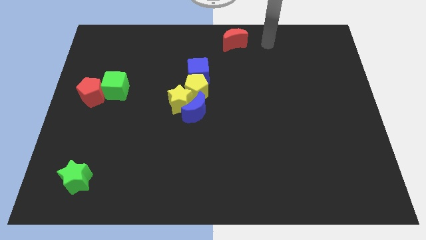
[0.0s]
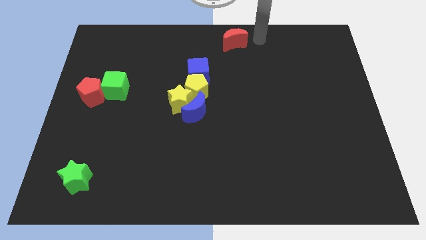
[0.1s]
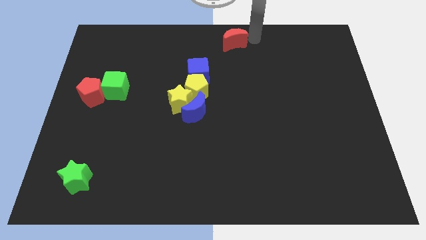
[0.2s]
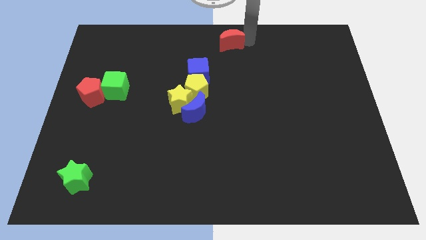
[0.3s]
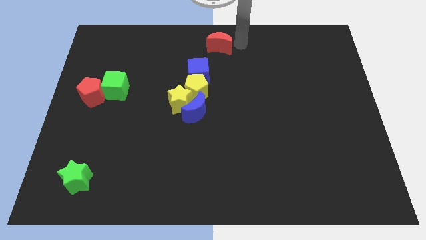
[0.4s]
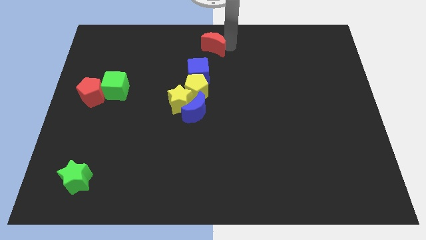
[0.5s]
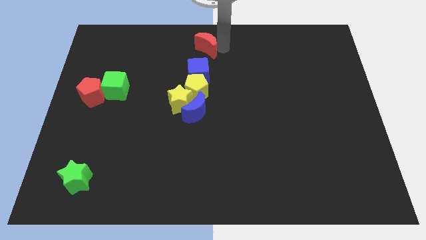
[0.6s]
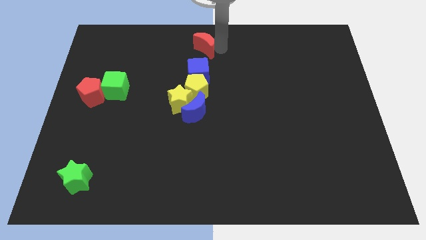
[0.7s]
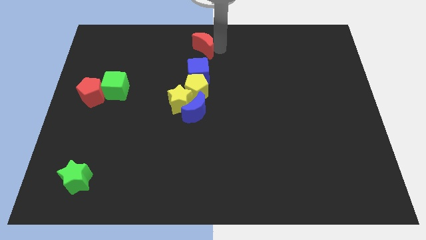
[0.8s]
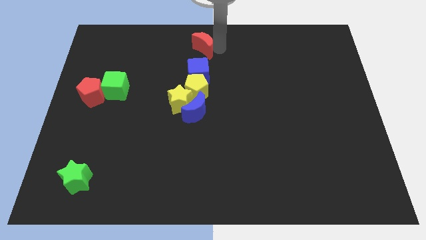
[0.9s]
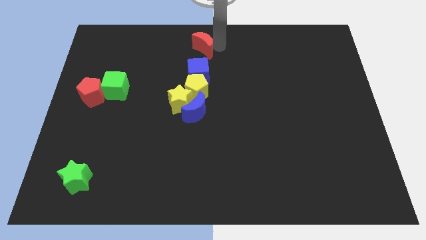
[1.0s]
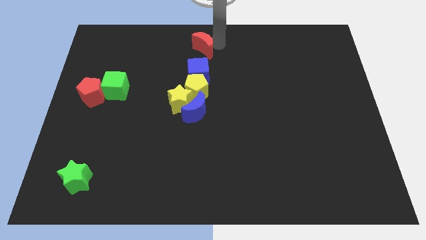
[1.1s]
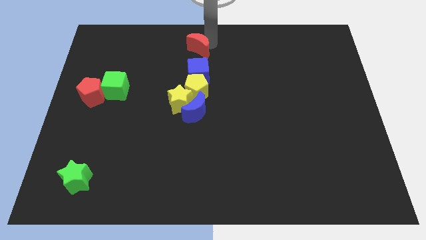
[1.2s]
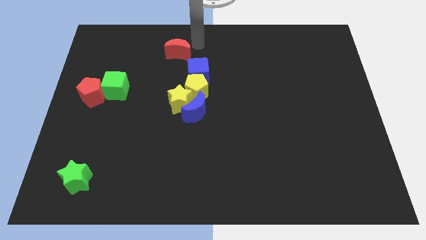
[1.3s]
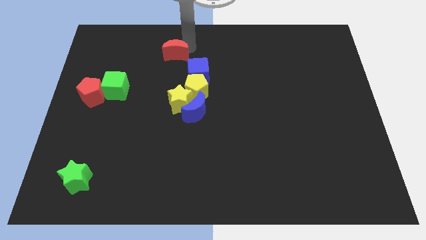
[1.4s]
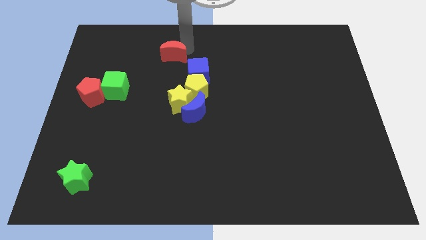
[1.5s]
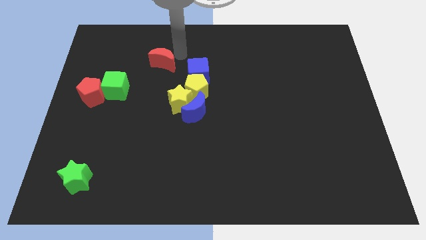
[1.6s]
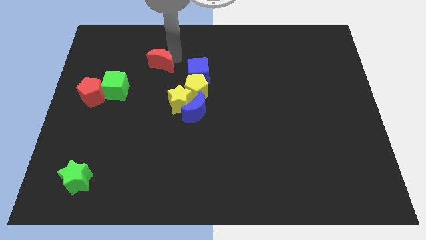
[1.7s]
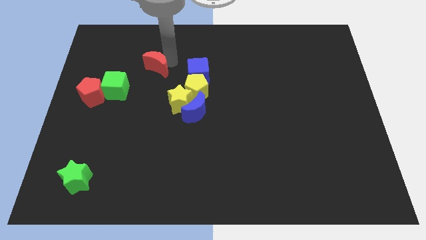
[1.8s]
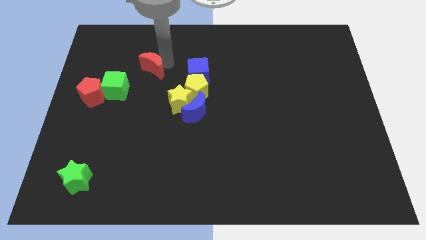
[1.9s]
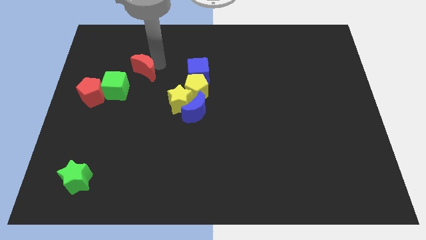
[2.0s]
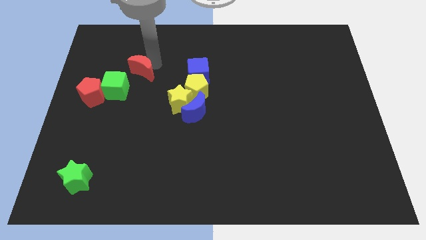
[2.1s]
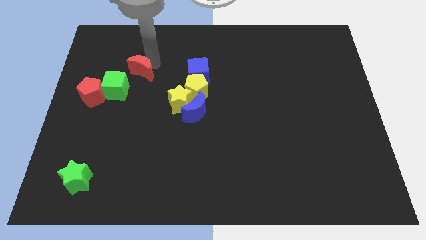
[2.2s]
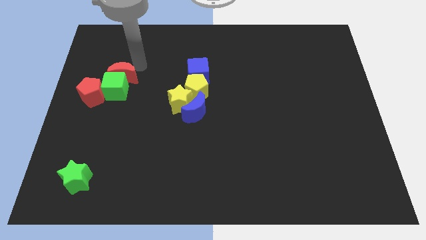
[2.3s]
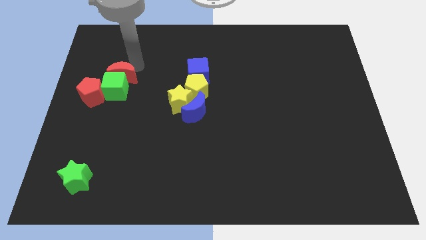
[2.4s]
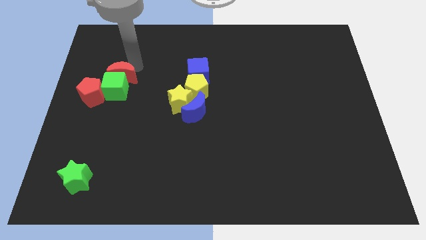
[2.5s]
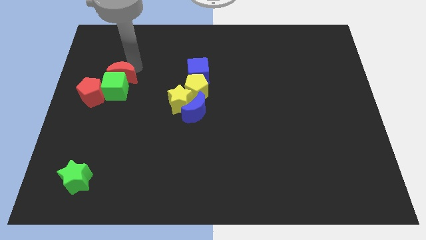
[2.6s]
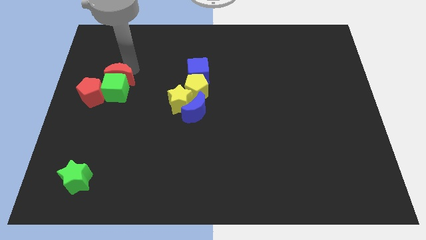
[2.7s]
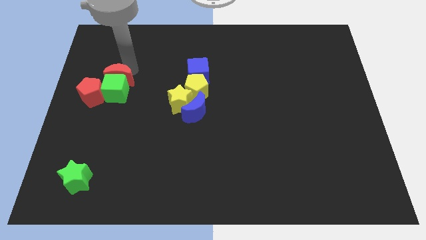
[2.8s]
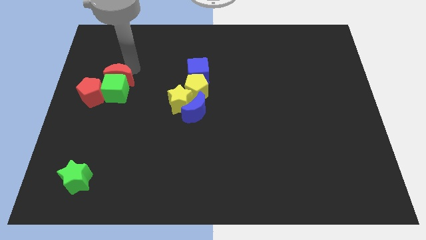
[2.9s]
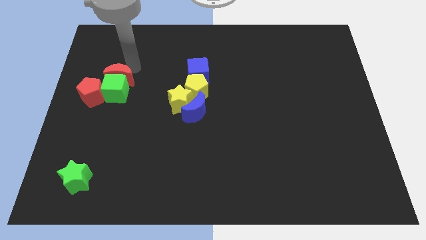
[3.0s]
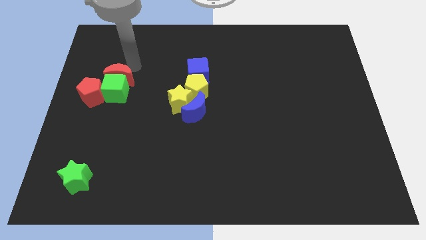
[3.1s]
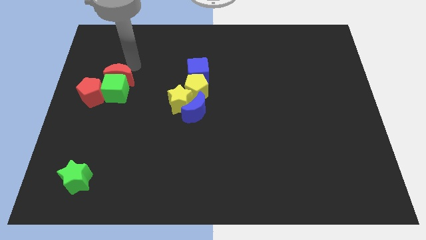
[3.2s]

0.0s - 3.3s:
place the red crescent above the green cube

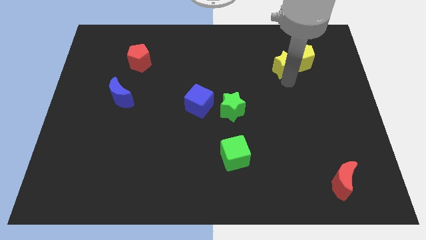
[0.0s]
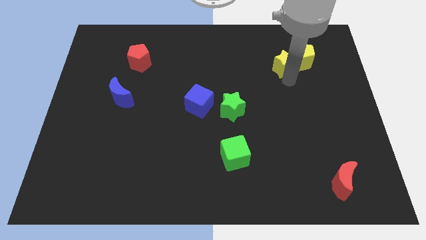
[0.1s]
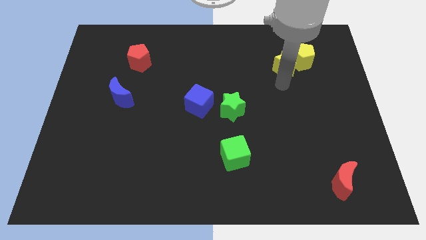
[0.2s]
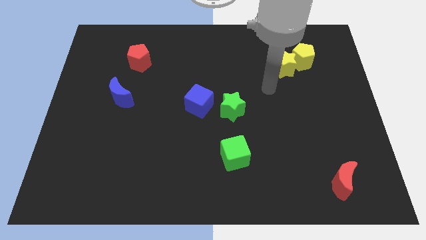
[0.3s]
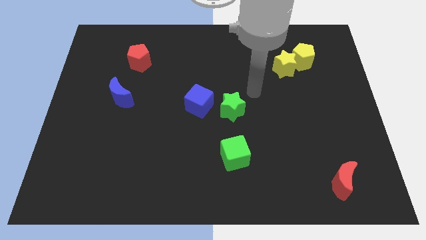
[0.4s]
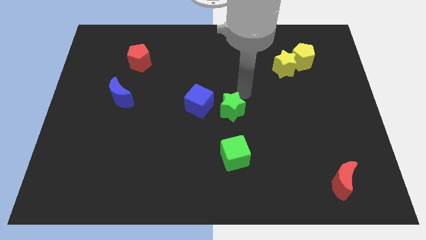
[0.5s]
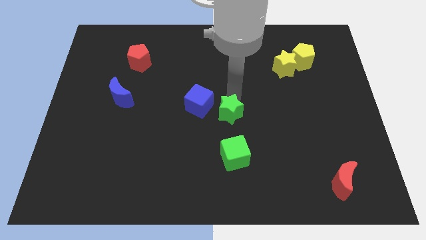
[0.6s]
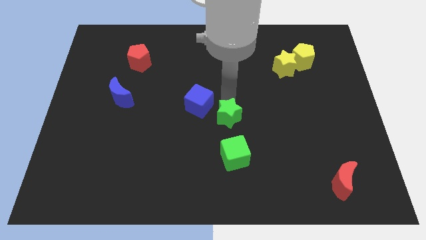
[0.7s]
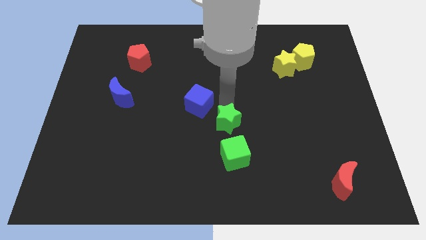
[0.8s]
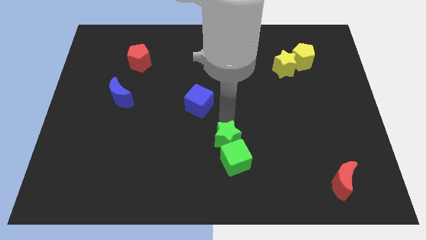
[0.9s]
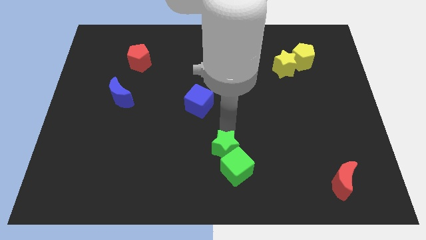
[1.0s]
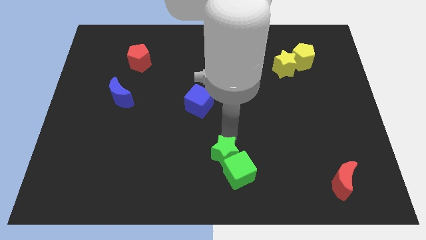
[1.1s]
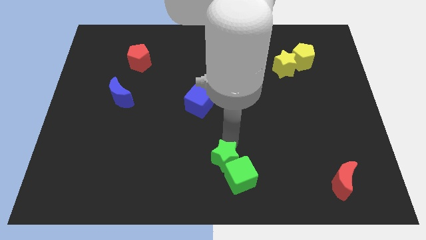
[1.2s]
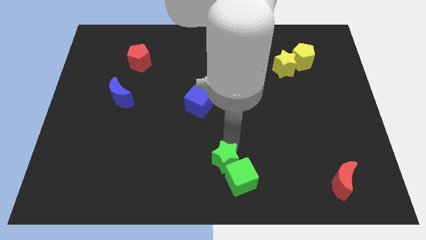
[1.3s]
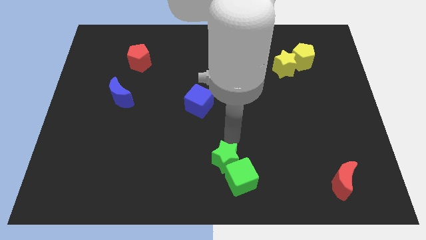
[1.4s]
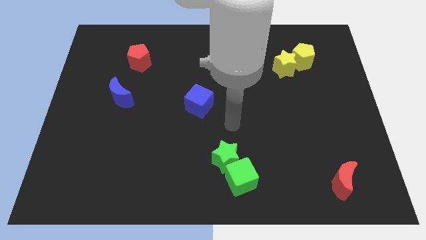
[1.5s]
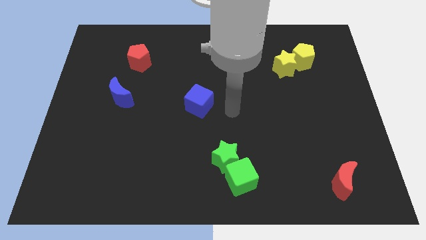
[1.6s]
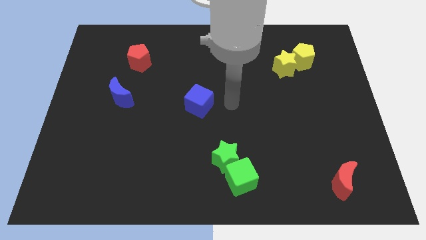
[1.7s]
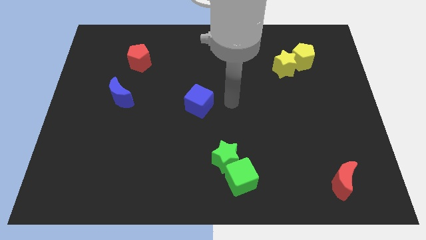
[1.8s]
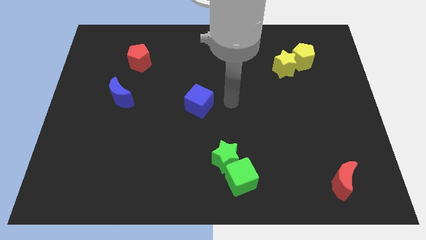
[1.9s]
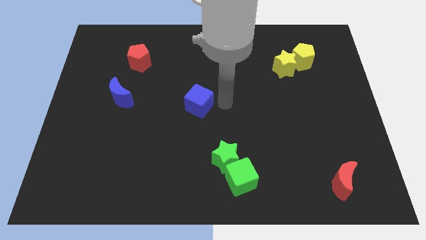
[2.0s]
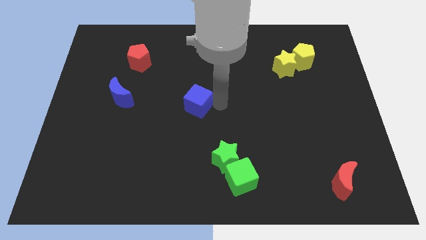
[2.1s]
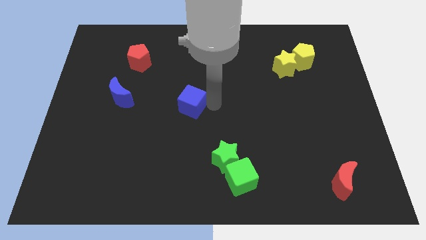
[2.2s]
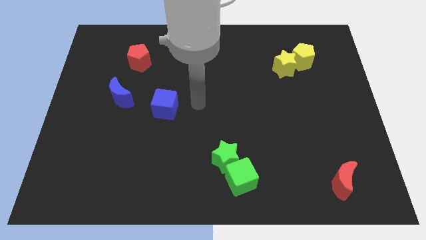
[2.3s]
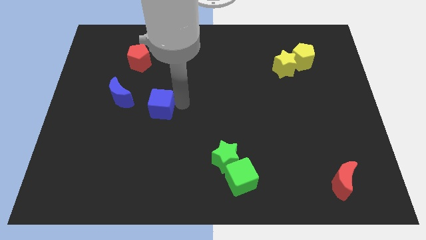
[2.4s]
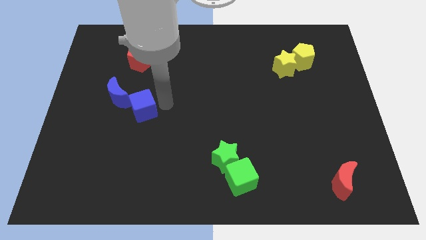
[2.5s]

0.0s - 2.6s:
move the green star into the green cube

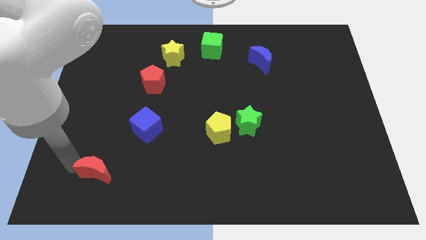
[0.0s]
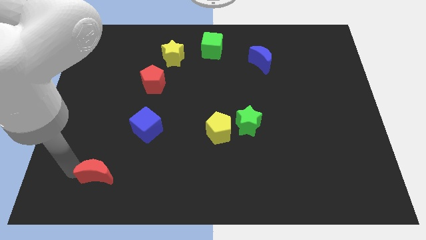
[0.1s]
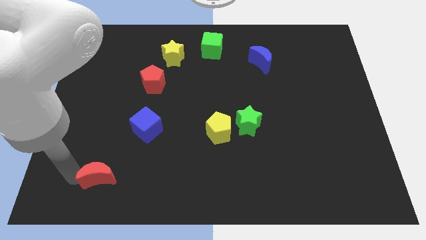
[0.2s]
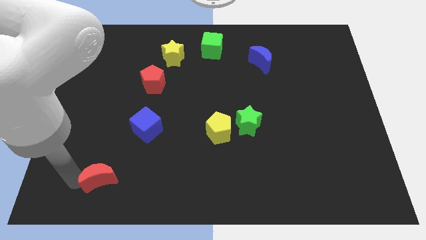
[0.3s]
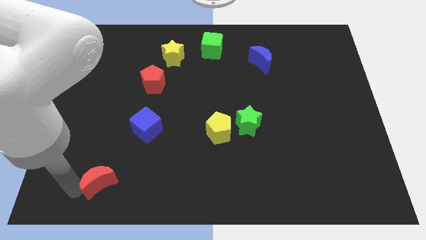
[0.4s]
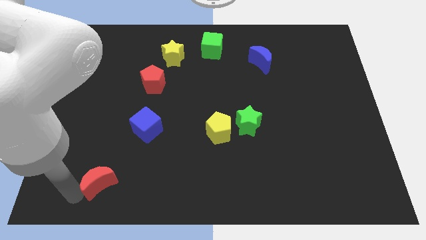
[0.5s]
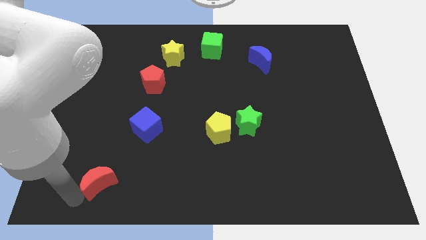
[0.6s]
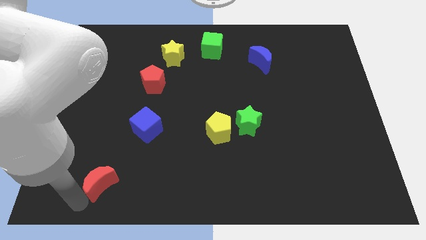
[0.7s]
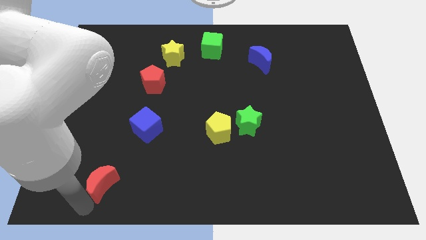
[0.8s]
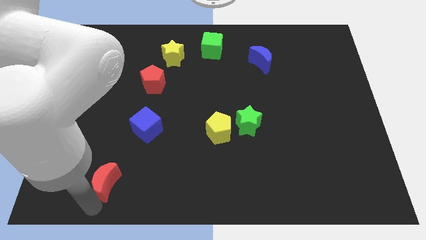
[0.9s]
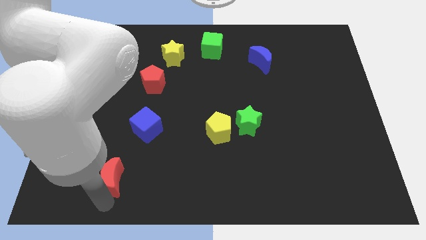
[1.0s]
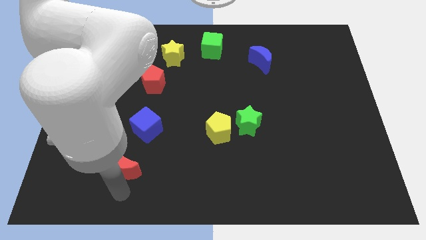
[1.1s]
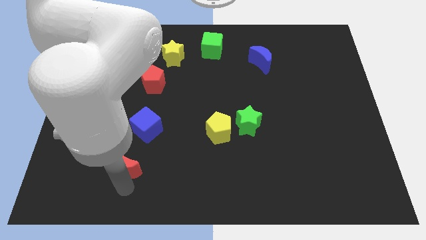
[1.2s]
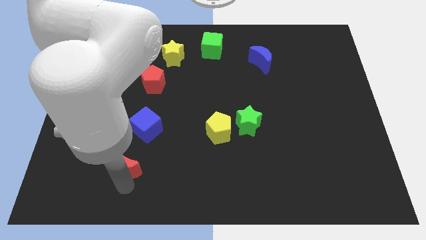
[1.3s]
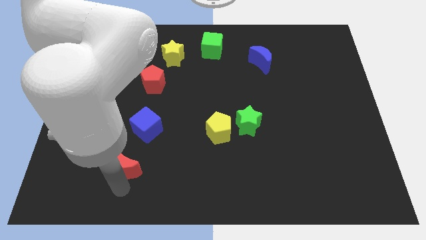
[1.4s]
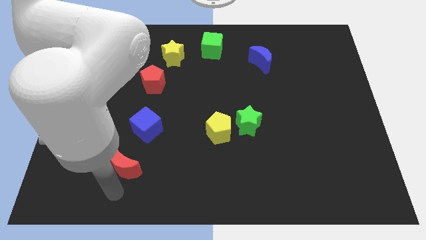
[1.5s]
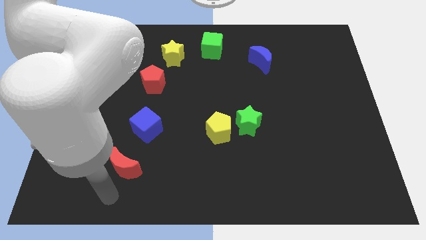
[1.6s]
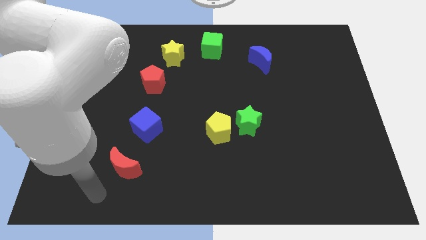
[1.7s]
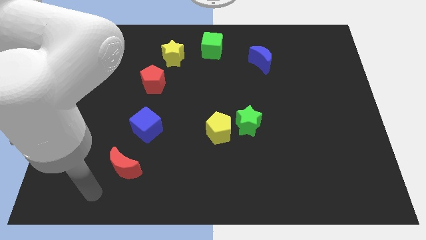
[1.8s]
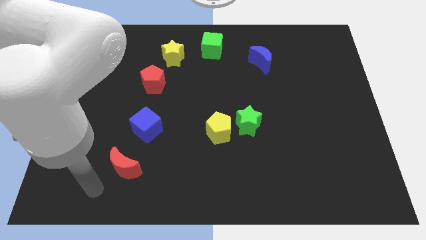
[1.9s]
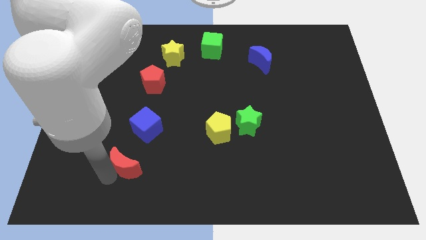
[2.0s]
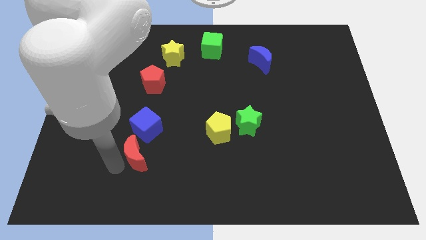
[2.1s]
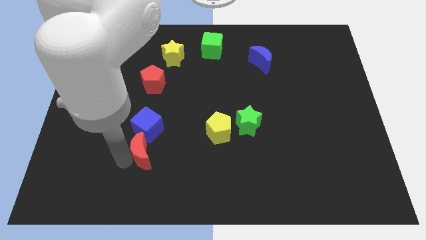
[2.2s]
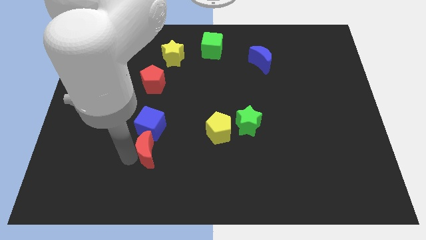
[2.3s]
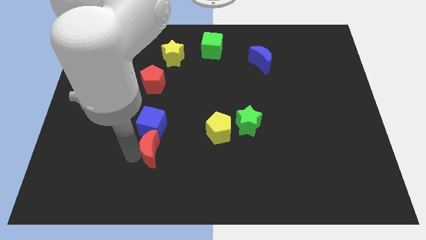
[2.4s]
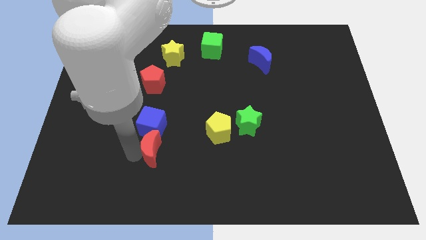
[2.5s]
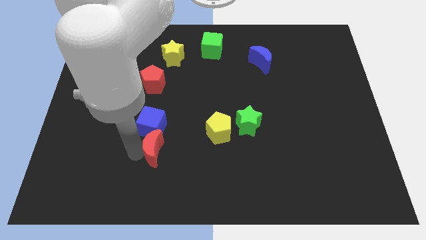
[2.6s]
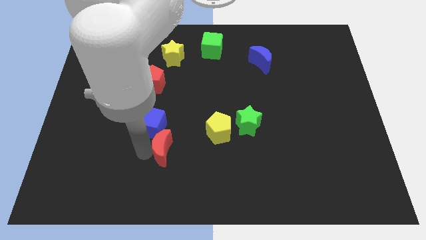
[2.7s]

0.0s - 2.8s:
move the red moon close to the blue cube

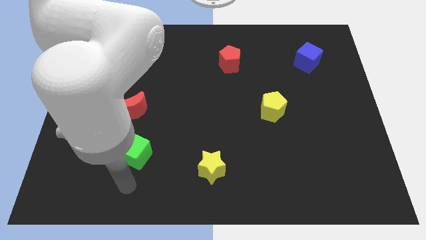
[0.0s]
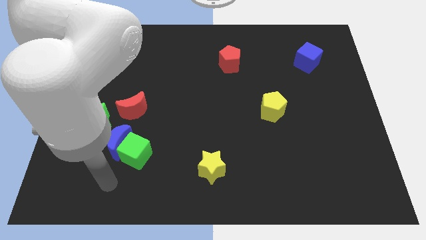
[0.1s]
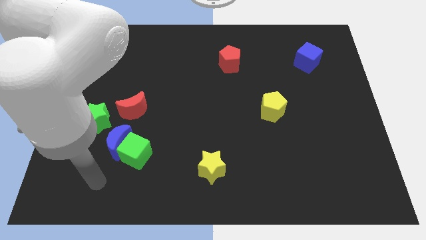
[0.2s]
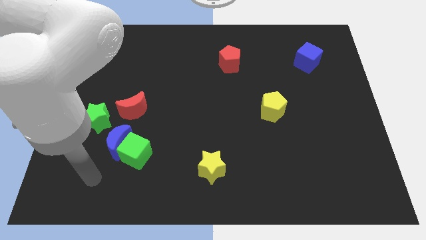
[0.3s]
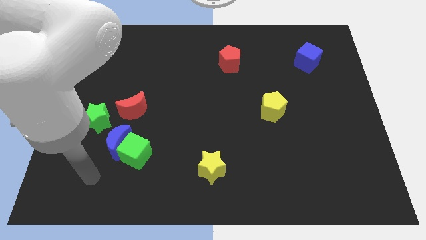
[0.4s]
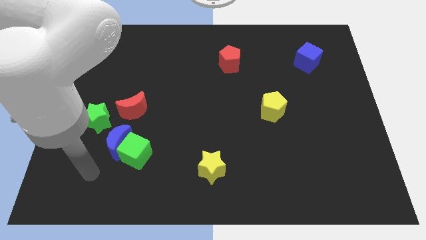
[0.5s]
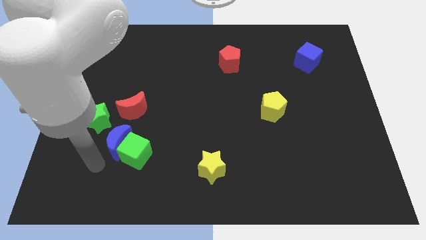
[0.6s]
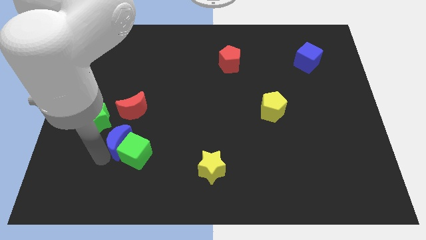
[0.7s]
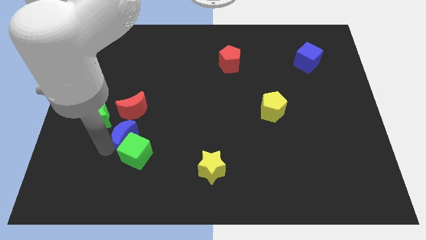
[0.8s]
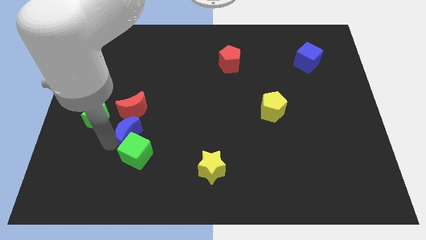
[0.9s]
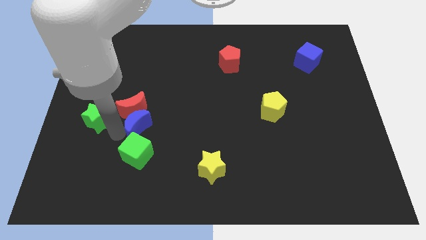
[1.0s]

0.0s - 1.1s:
push the blue crescent to the bottom of the red crescent
